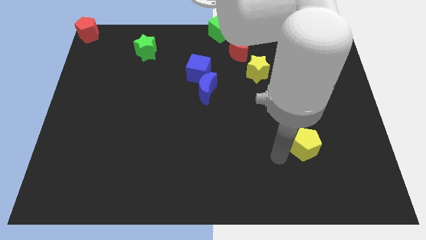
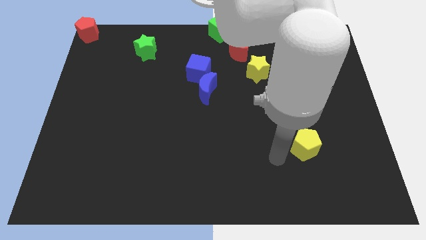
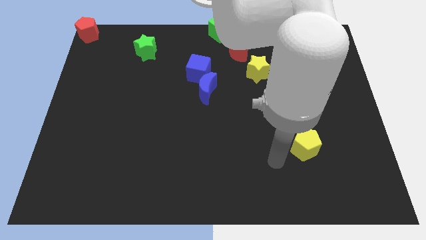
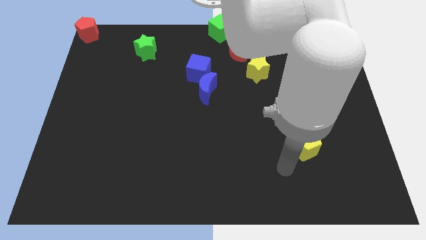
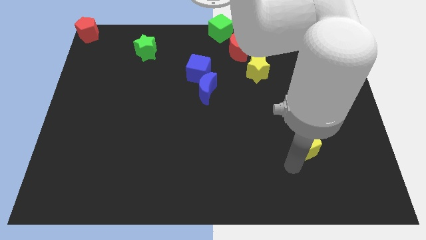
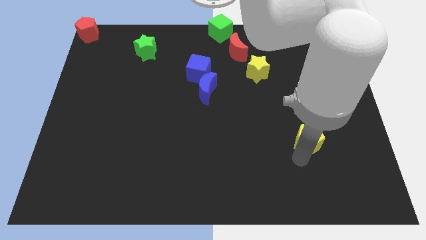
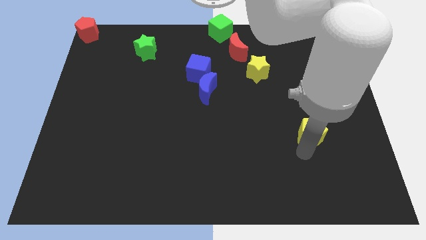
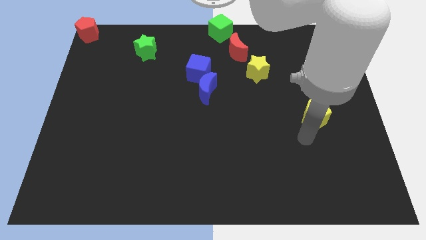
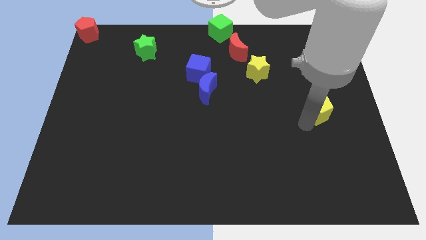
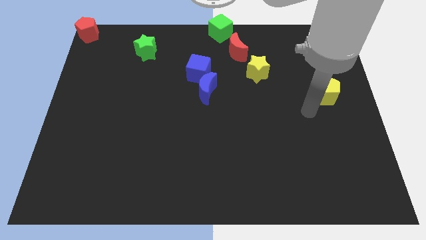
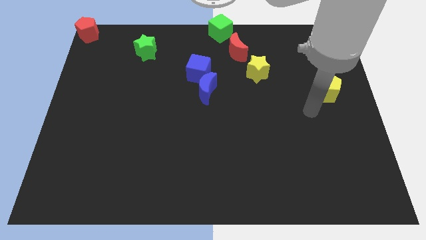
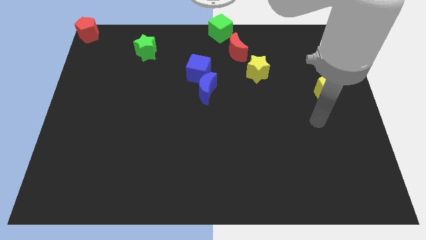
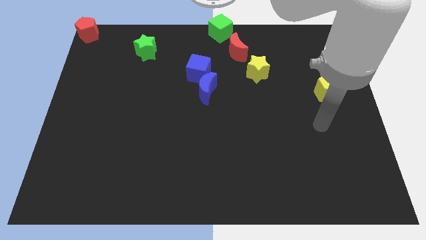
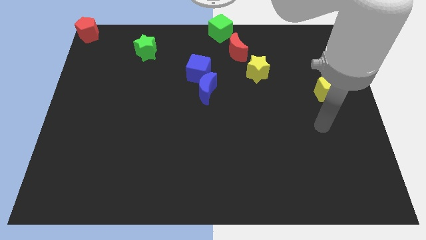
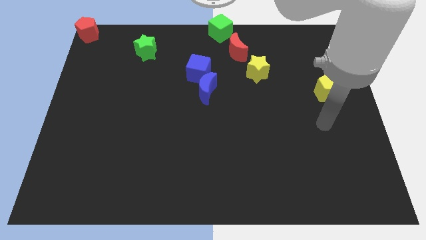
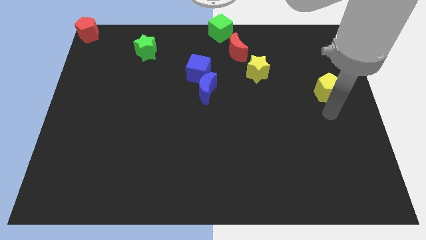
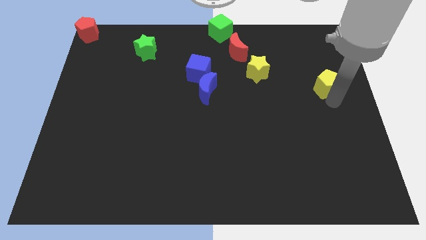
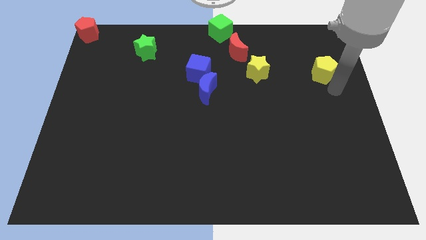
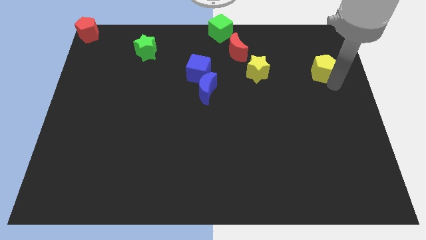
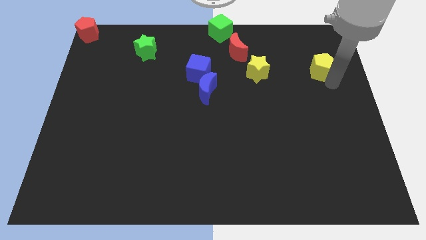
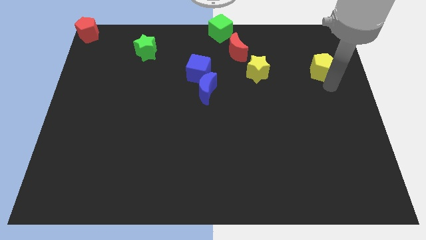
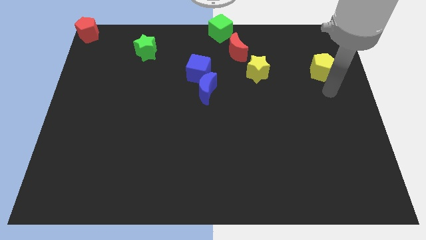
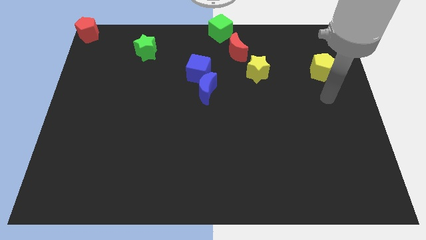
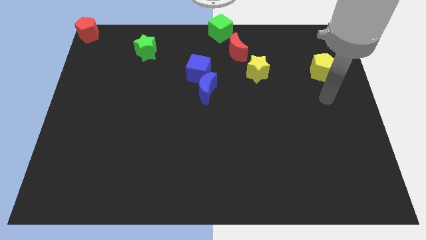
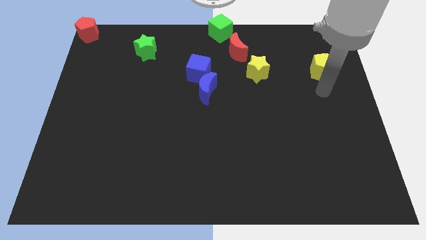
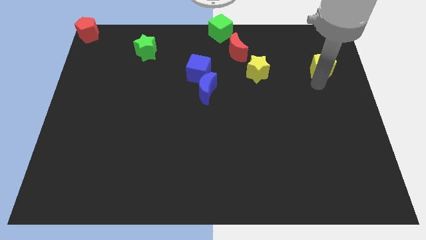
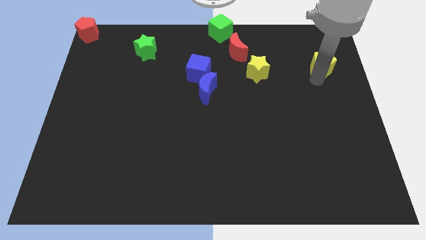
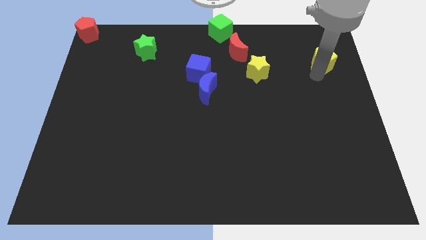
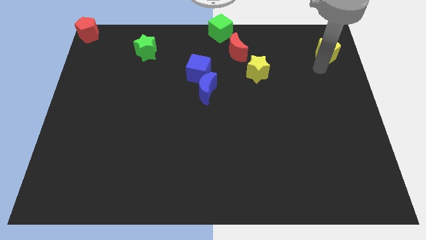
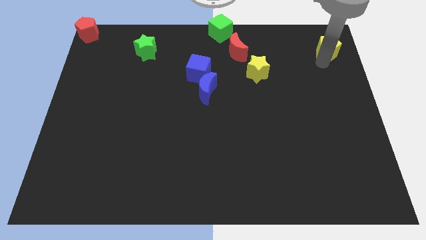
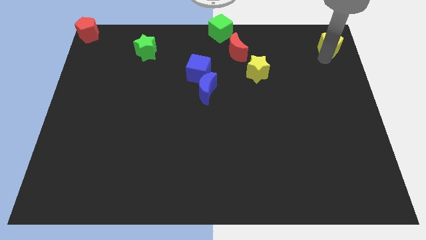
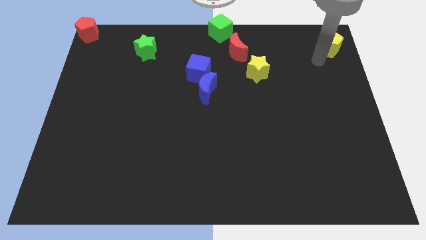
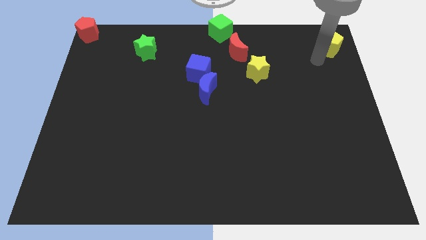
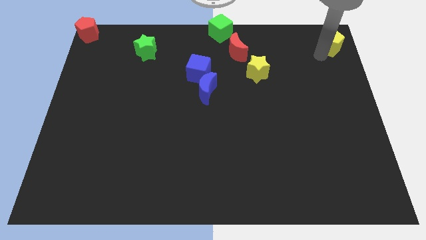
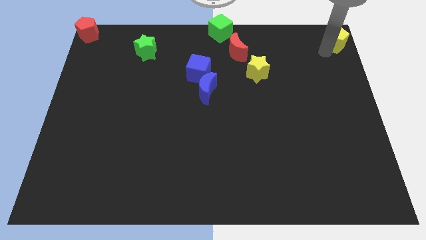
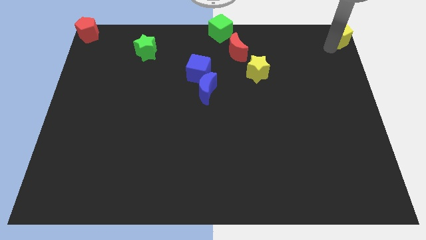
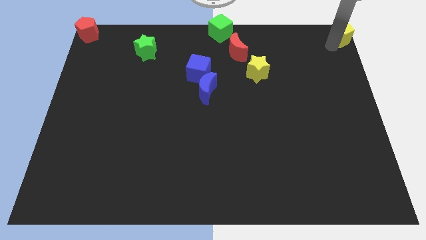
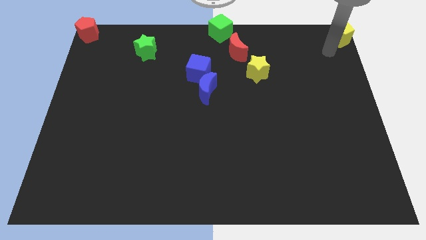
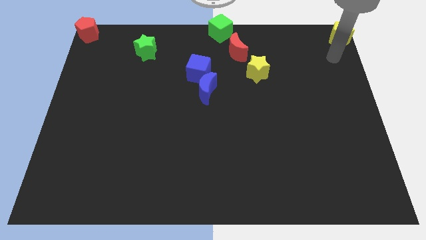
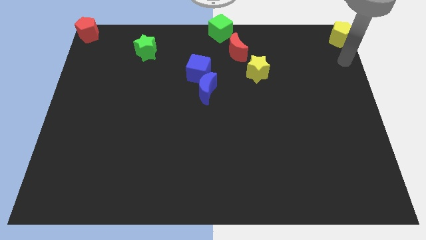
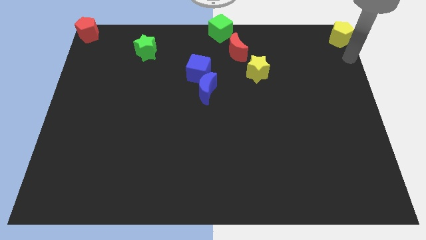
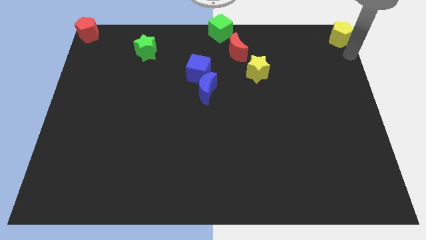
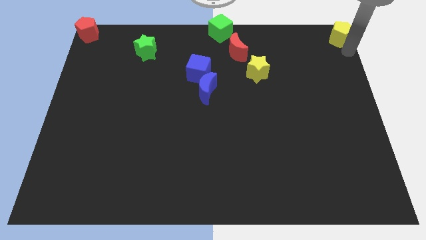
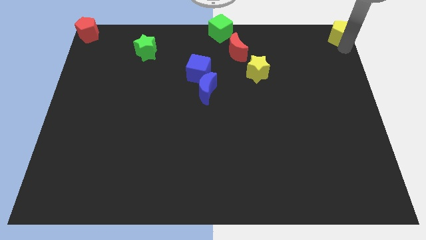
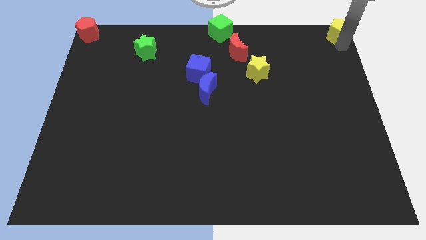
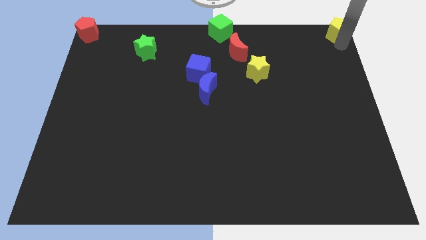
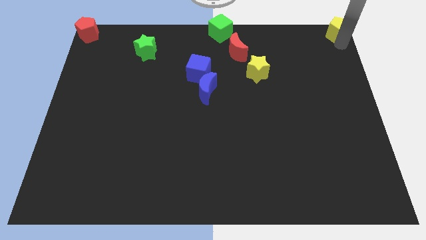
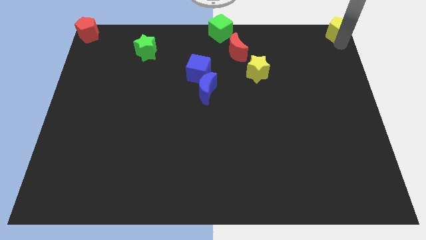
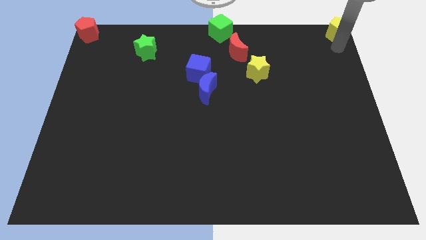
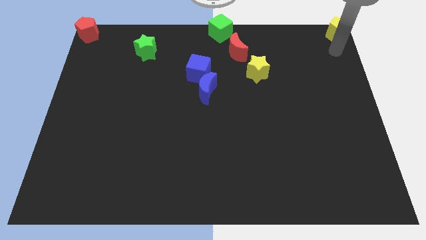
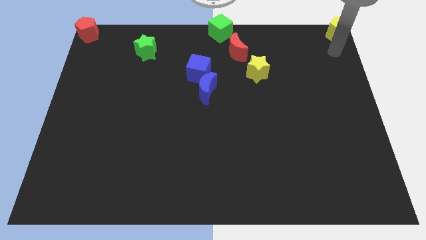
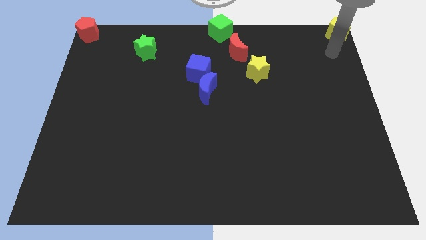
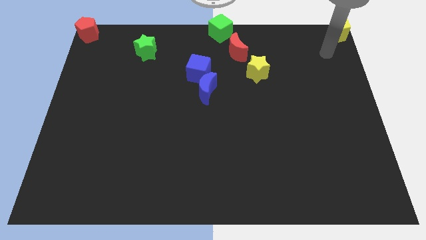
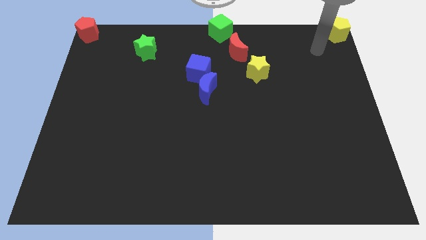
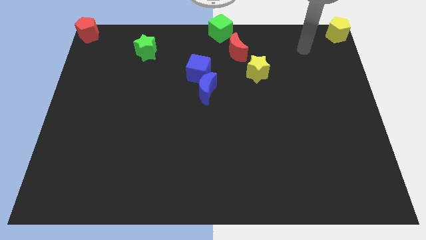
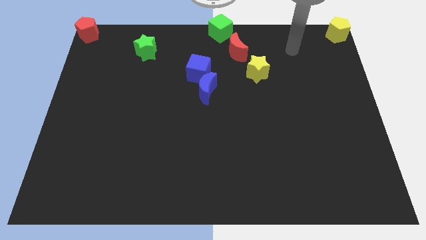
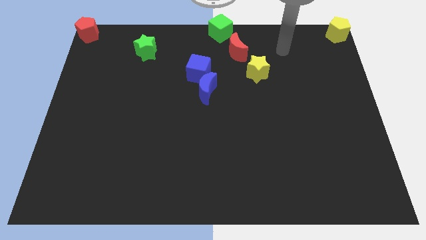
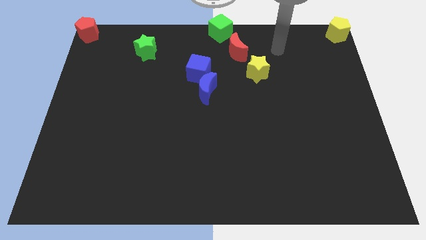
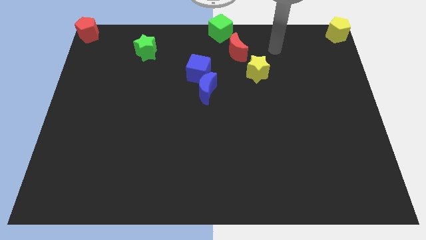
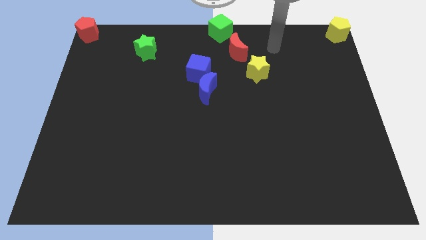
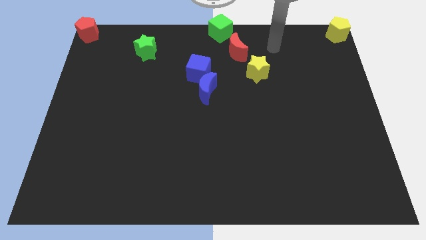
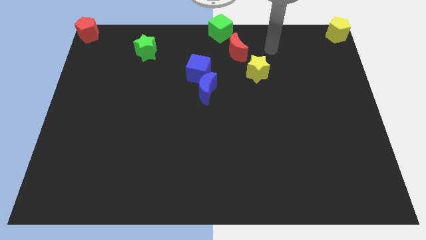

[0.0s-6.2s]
move yellow pentagon to the top right corner

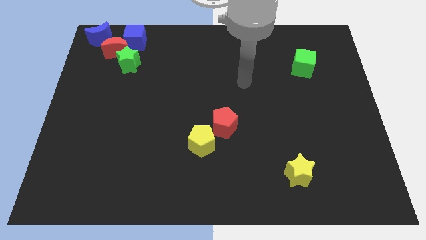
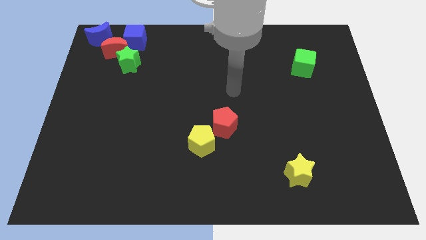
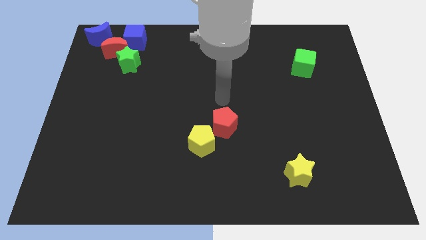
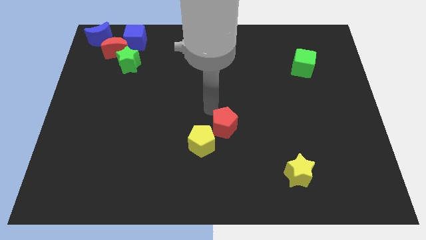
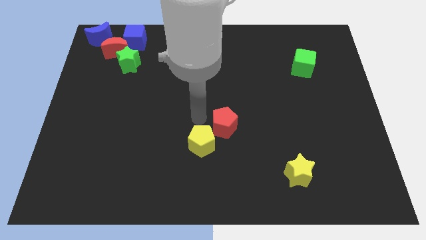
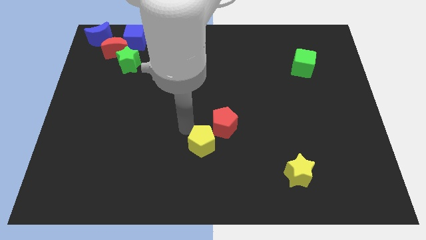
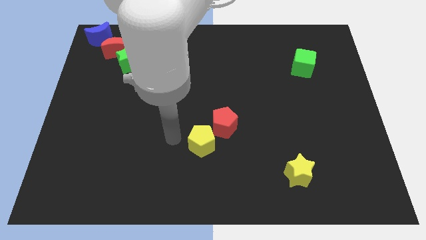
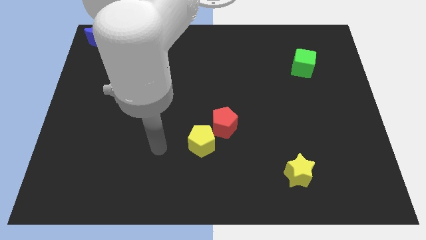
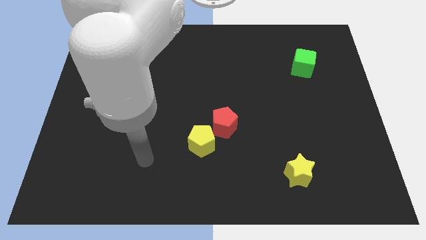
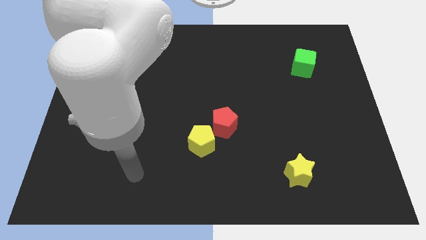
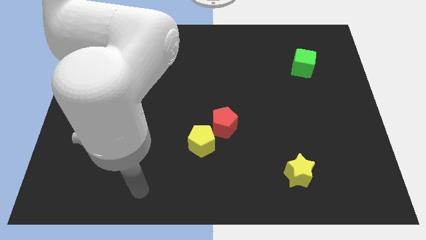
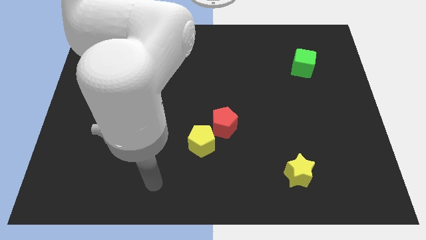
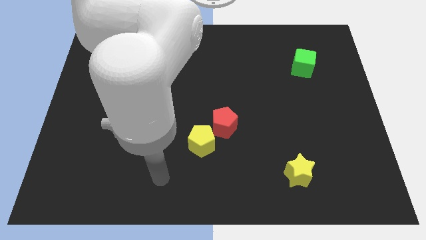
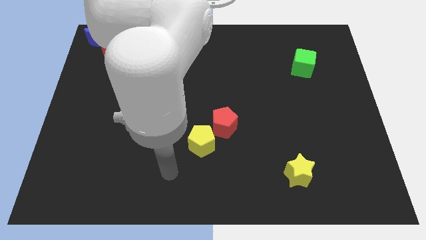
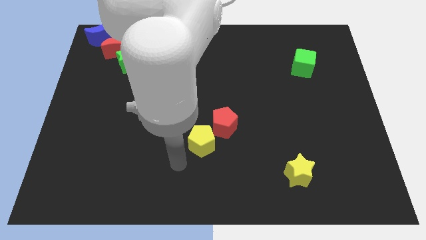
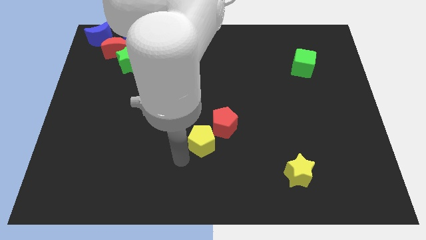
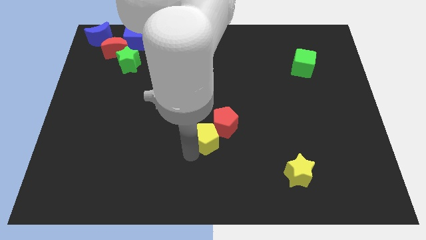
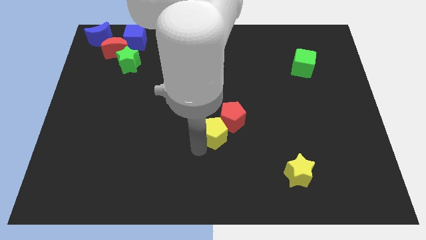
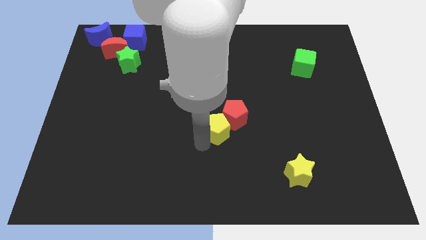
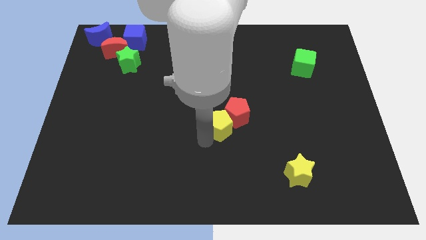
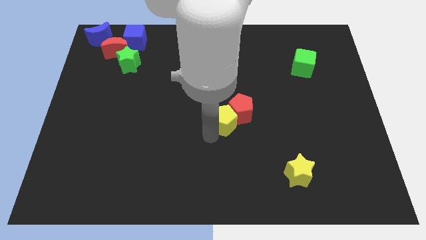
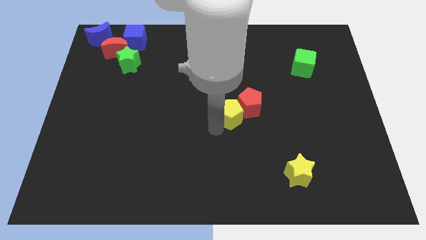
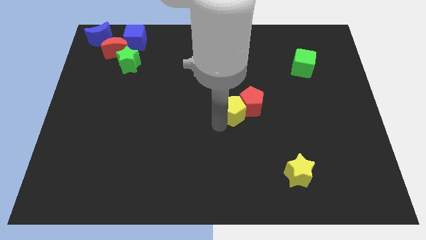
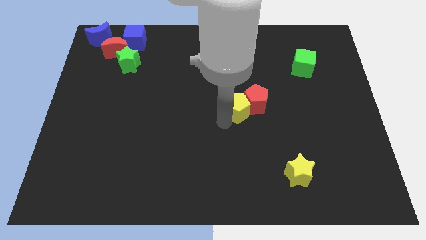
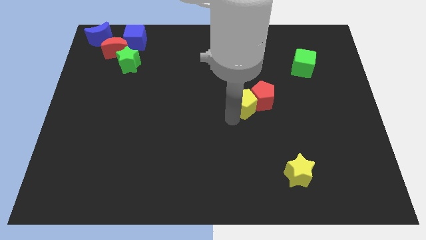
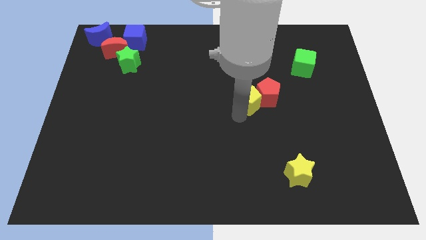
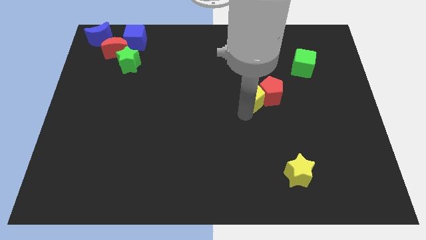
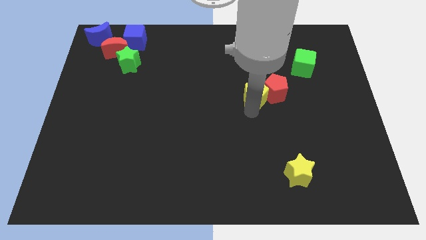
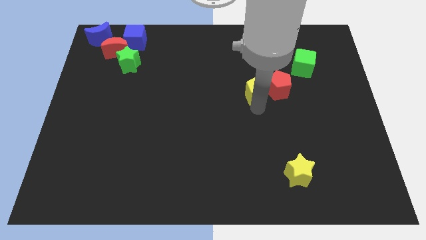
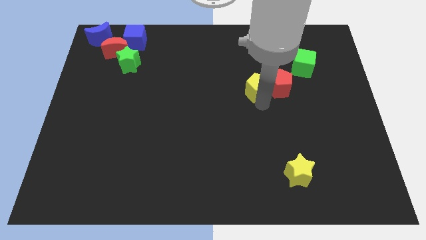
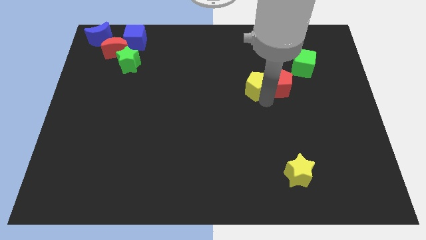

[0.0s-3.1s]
move the yellow pentagon and red pentagon to the green cube
